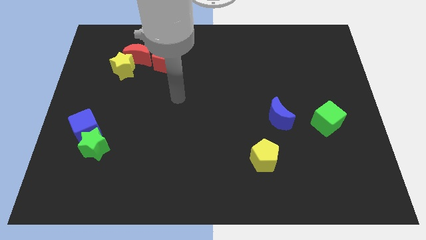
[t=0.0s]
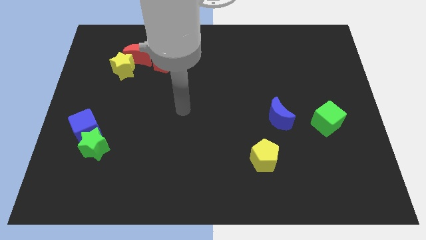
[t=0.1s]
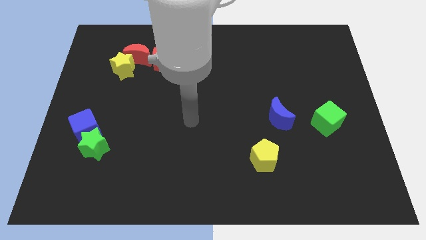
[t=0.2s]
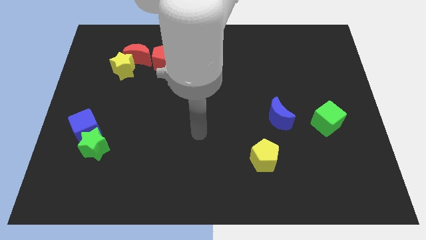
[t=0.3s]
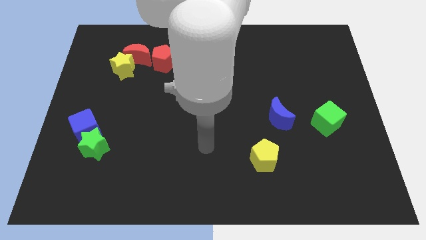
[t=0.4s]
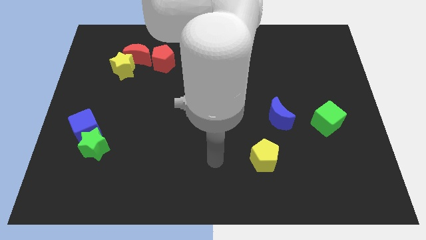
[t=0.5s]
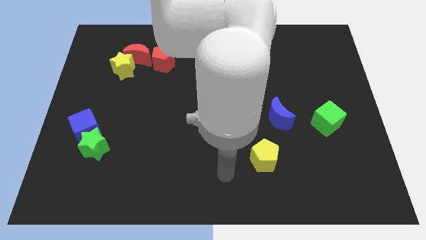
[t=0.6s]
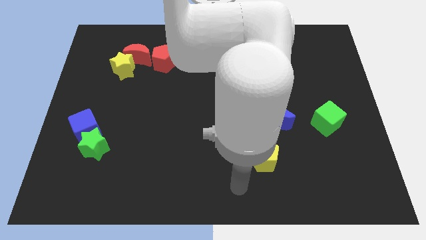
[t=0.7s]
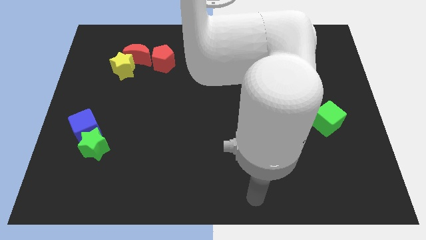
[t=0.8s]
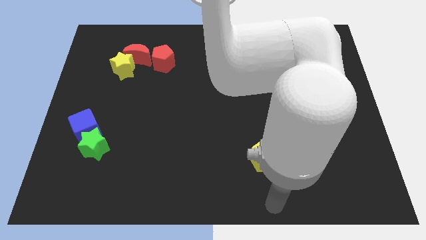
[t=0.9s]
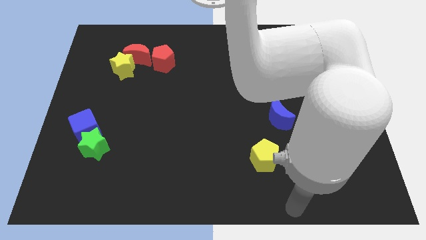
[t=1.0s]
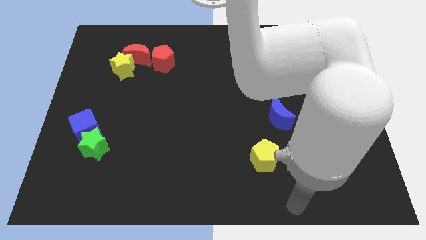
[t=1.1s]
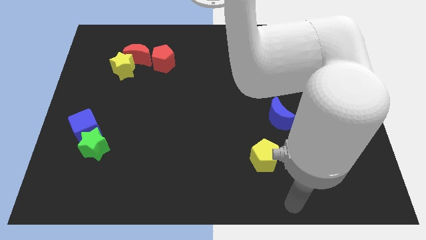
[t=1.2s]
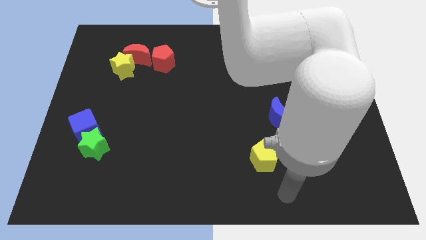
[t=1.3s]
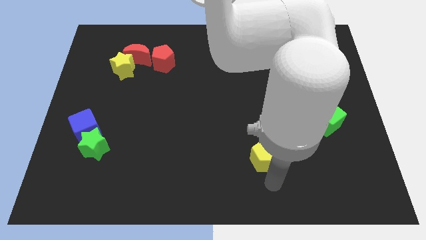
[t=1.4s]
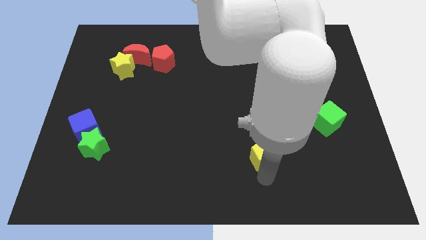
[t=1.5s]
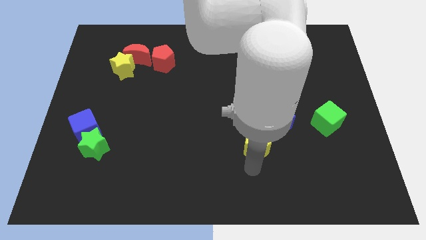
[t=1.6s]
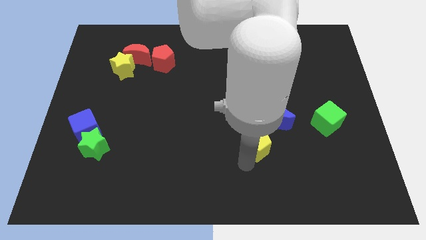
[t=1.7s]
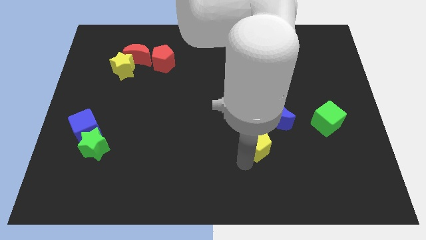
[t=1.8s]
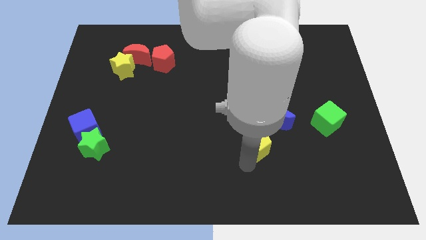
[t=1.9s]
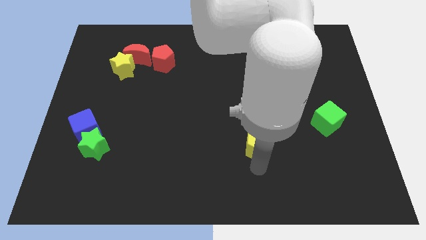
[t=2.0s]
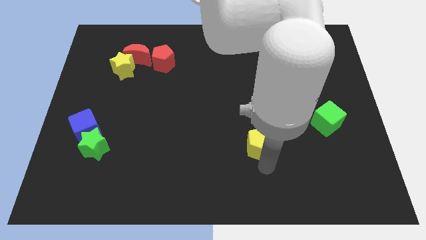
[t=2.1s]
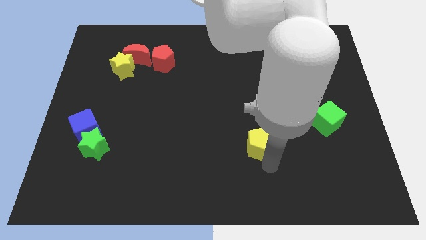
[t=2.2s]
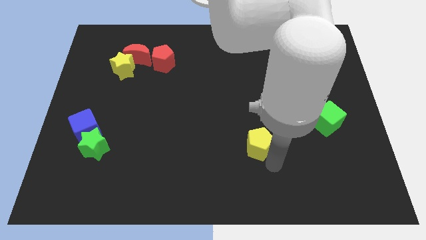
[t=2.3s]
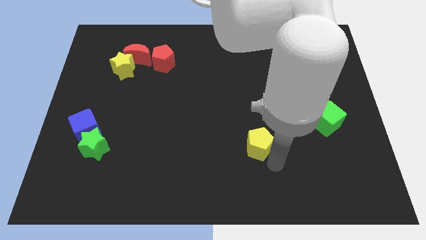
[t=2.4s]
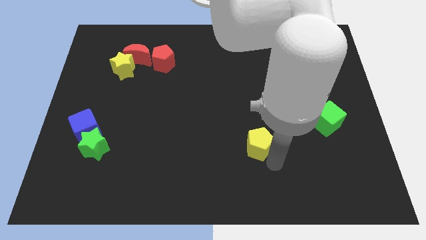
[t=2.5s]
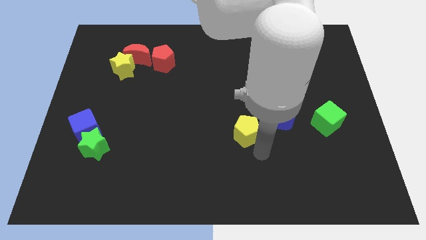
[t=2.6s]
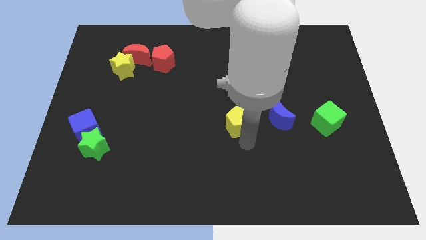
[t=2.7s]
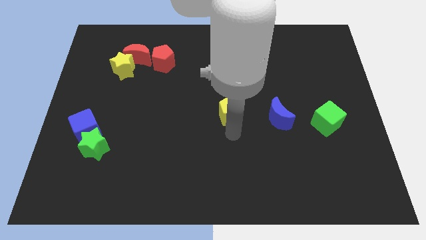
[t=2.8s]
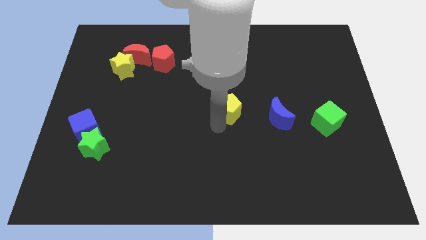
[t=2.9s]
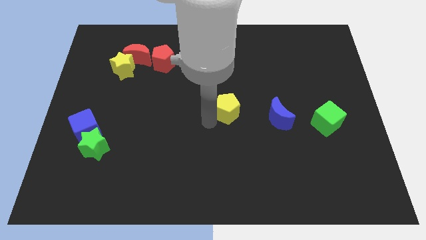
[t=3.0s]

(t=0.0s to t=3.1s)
move yellow pentagon to the left of blue moon

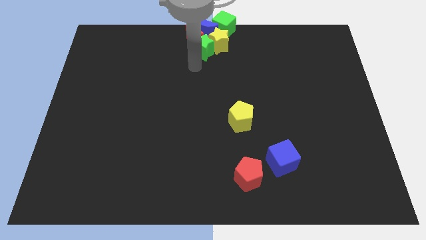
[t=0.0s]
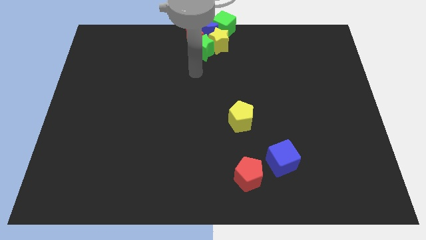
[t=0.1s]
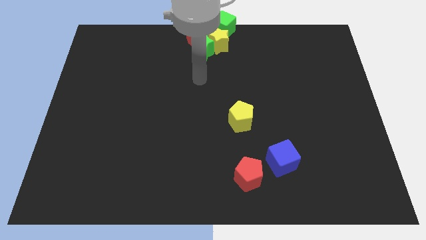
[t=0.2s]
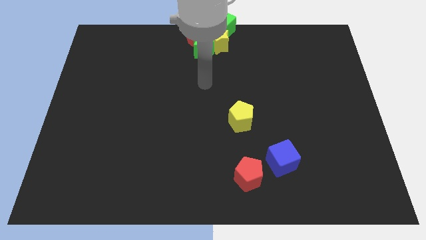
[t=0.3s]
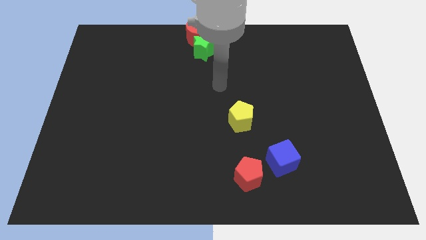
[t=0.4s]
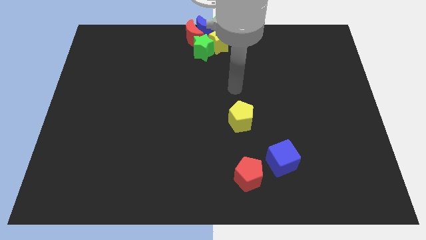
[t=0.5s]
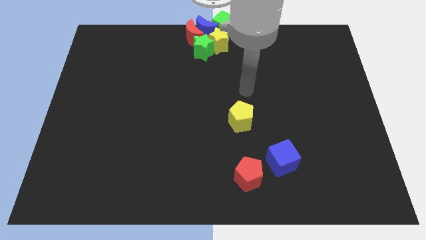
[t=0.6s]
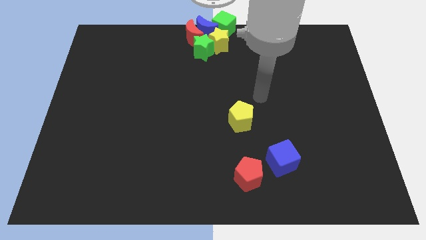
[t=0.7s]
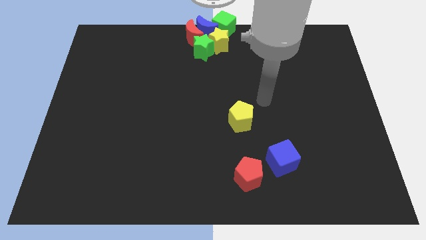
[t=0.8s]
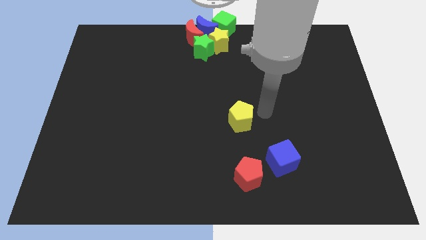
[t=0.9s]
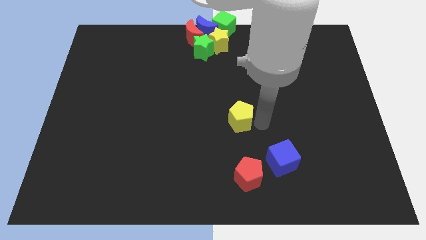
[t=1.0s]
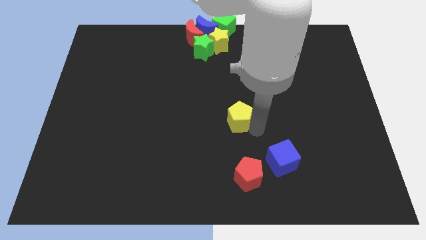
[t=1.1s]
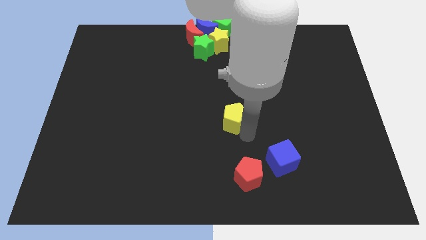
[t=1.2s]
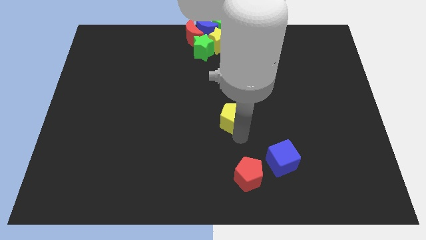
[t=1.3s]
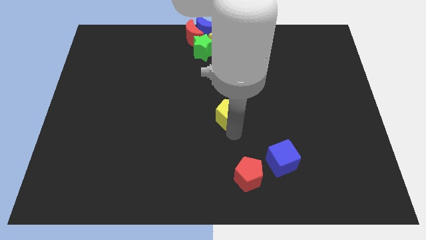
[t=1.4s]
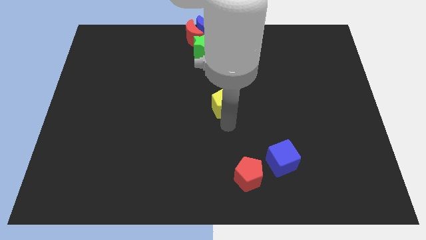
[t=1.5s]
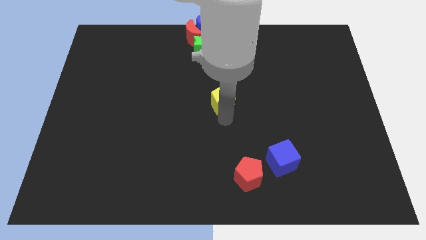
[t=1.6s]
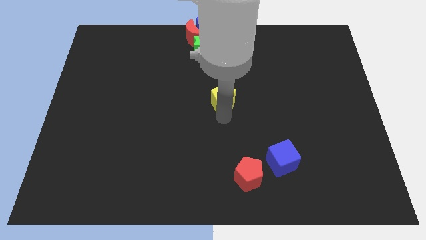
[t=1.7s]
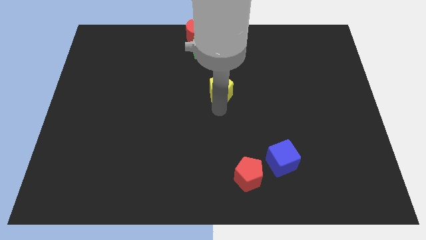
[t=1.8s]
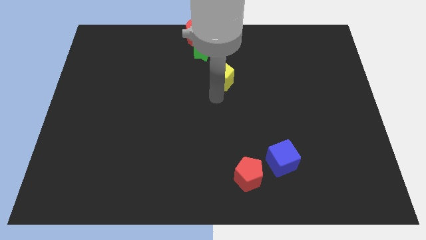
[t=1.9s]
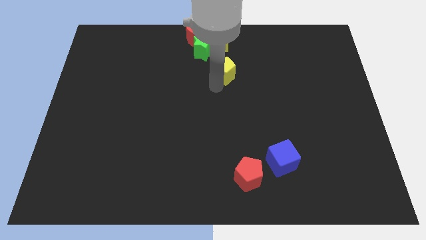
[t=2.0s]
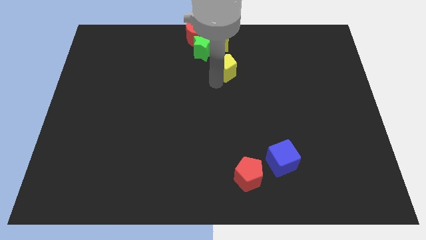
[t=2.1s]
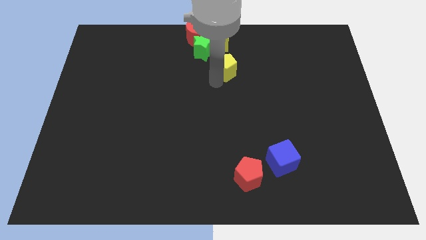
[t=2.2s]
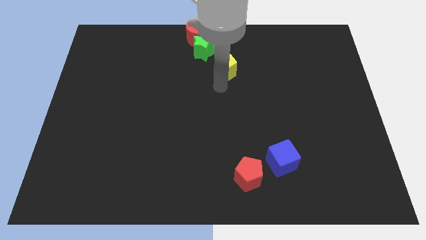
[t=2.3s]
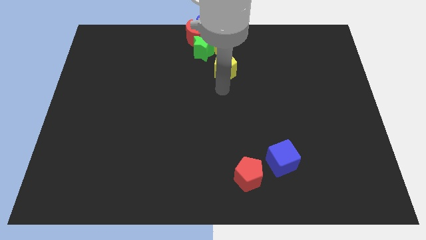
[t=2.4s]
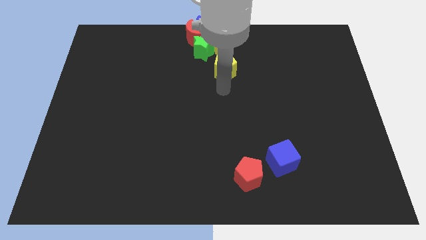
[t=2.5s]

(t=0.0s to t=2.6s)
push the yellow pentagon towards the yellow star

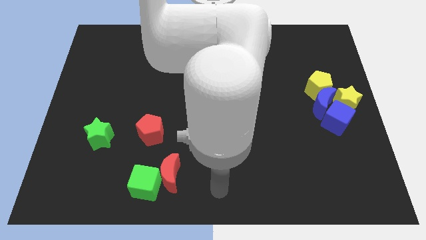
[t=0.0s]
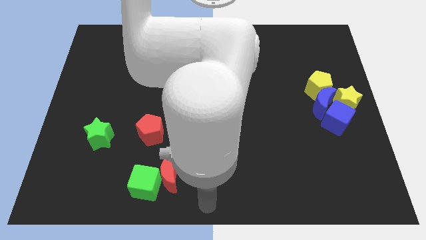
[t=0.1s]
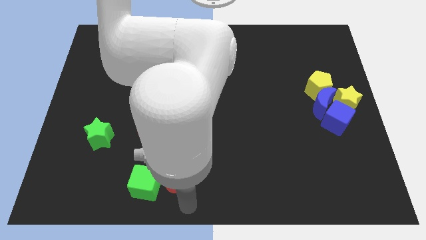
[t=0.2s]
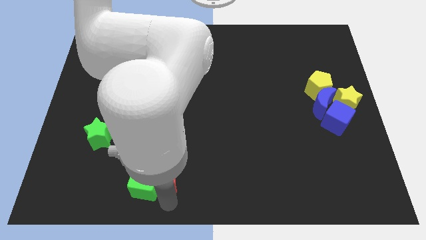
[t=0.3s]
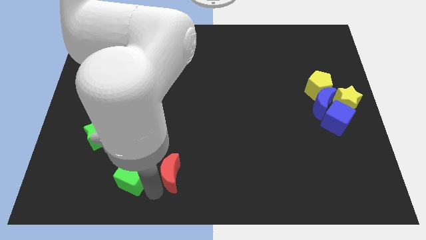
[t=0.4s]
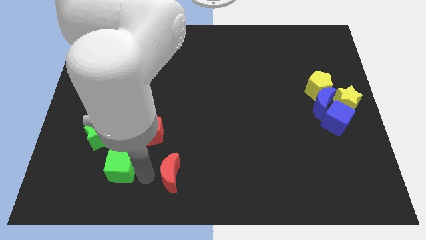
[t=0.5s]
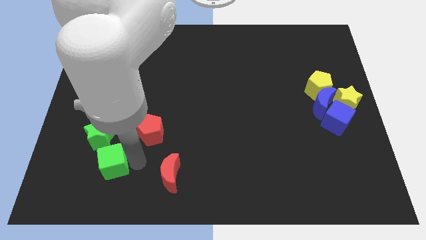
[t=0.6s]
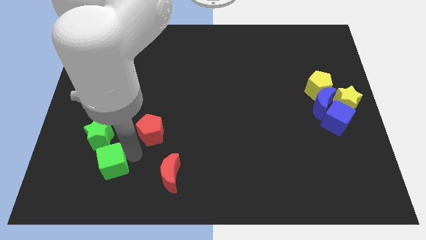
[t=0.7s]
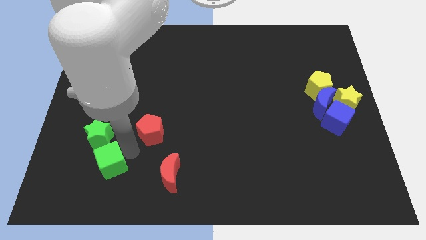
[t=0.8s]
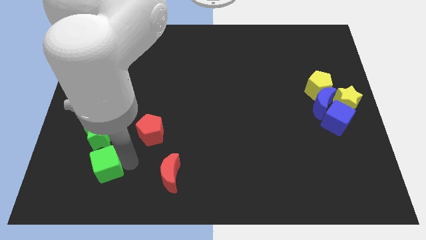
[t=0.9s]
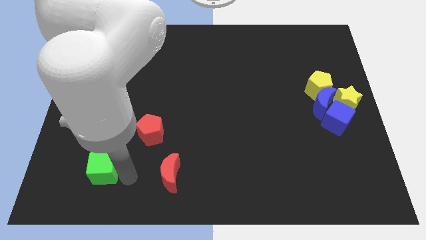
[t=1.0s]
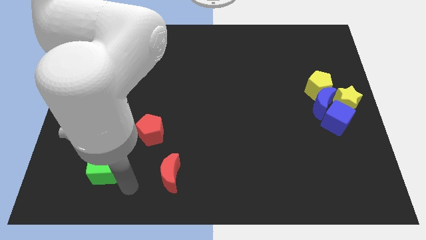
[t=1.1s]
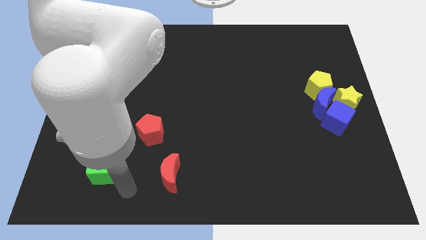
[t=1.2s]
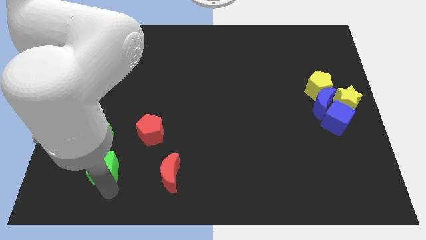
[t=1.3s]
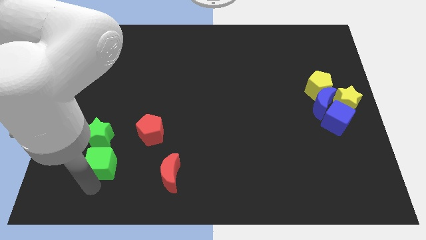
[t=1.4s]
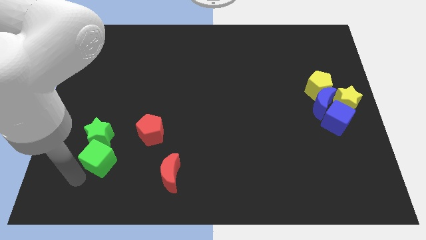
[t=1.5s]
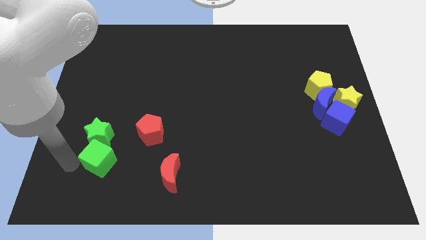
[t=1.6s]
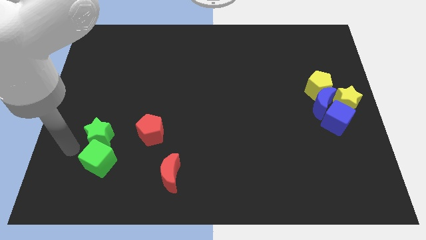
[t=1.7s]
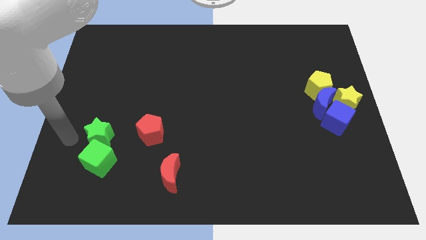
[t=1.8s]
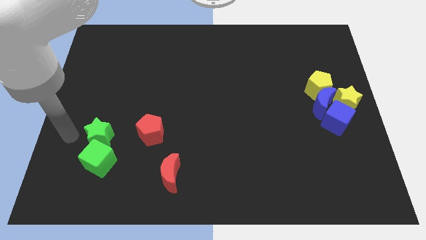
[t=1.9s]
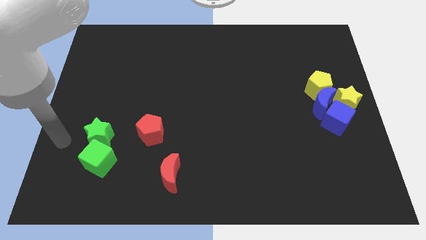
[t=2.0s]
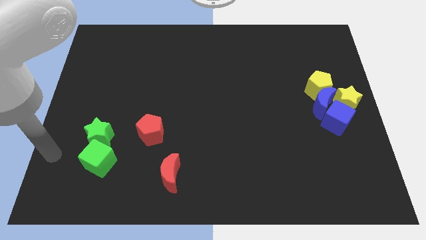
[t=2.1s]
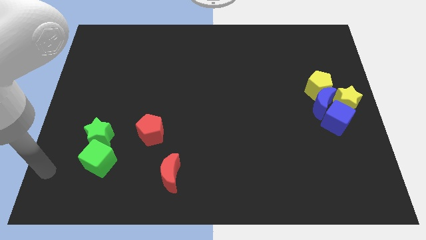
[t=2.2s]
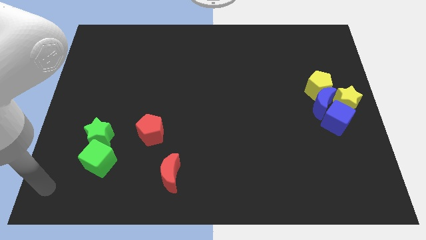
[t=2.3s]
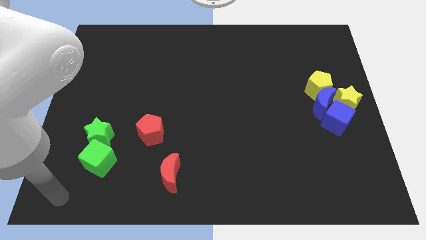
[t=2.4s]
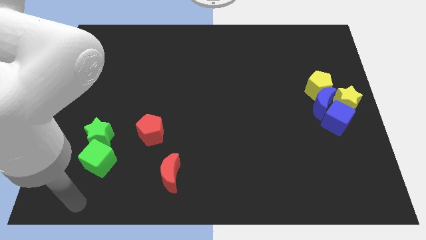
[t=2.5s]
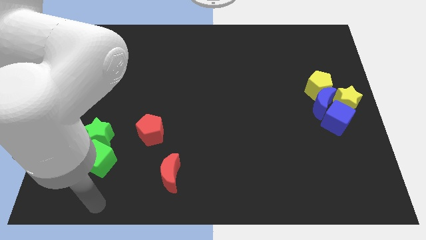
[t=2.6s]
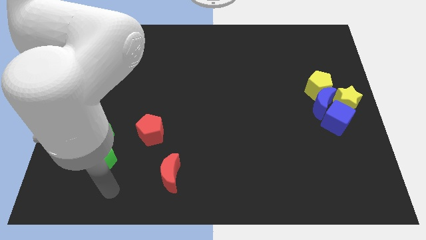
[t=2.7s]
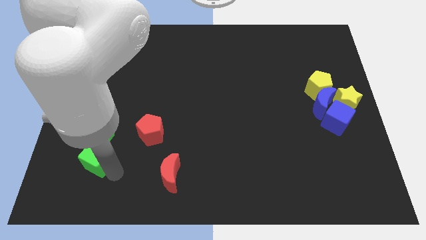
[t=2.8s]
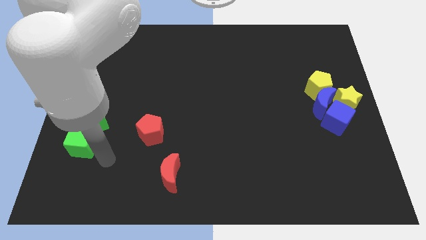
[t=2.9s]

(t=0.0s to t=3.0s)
move the green cube into the green star

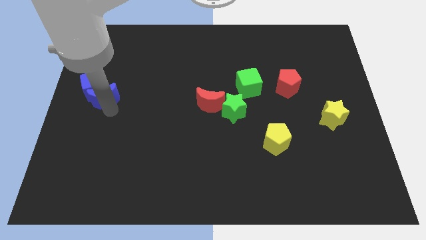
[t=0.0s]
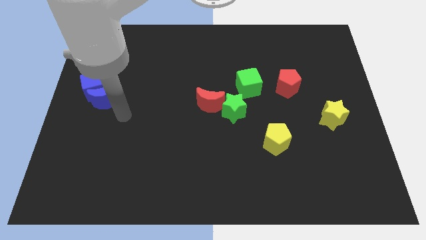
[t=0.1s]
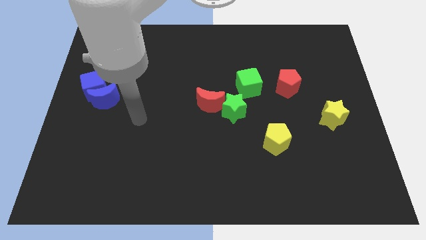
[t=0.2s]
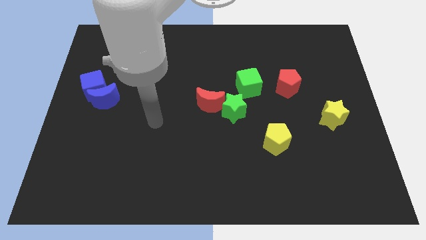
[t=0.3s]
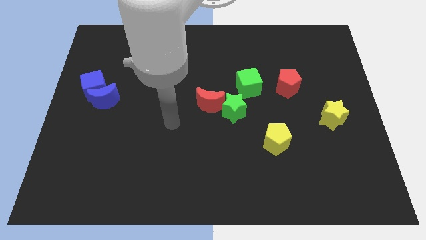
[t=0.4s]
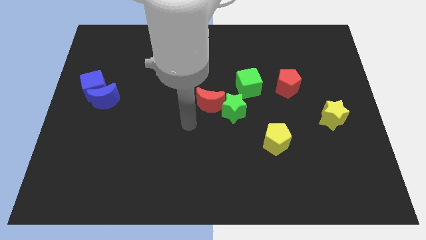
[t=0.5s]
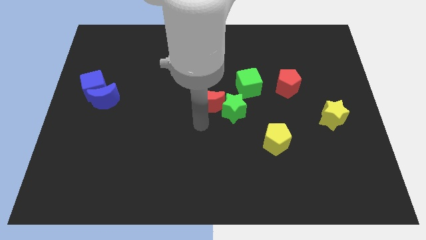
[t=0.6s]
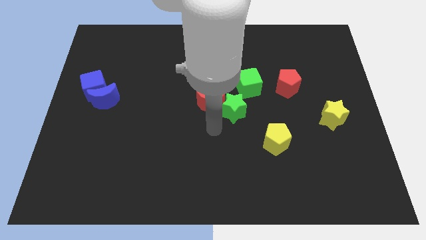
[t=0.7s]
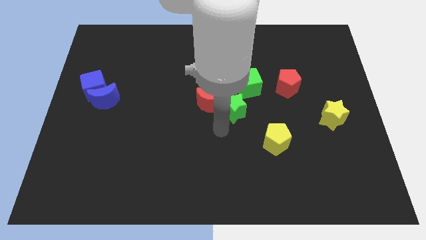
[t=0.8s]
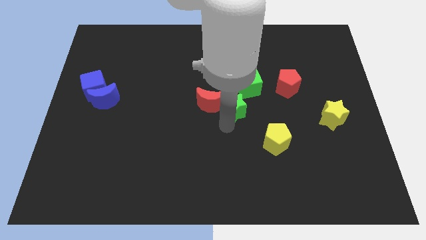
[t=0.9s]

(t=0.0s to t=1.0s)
point the arm below the green star
